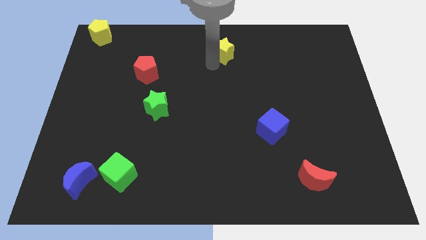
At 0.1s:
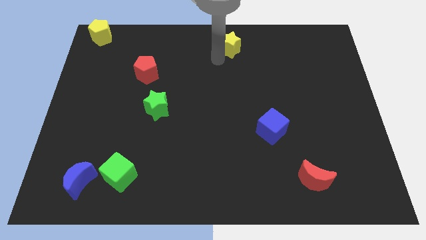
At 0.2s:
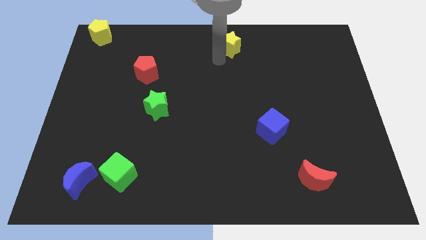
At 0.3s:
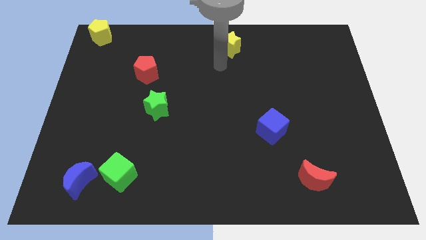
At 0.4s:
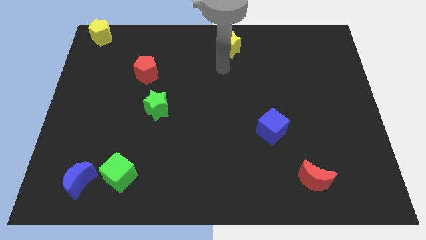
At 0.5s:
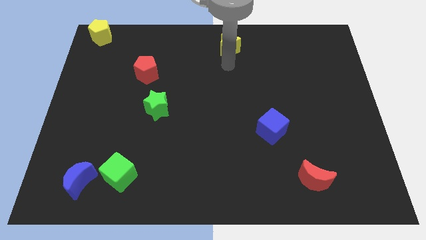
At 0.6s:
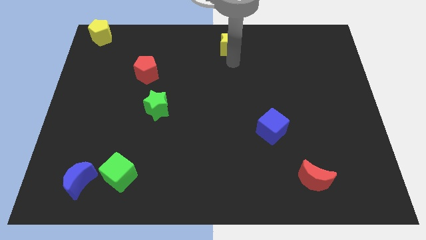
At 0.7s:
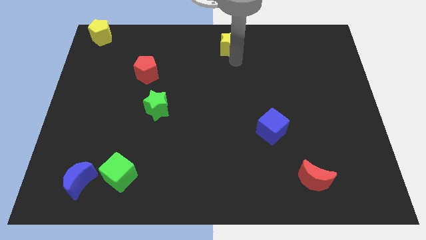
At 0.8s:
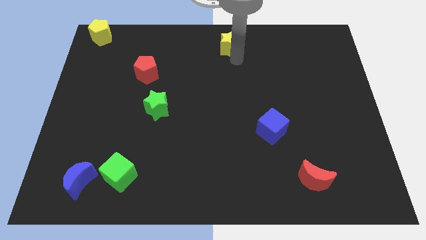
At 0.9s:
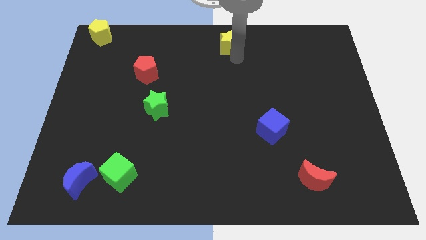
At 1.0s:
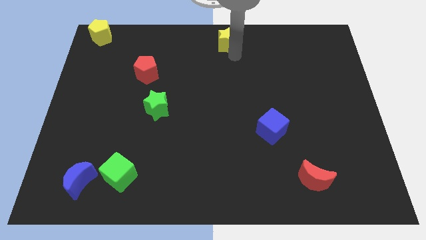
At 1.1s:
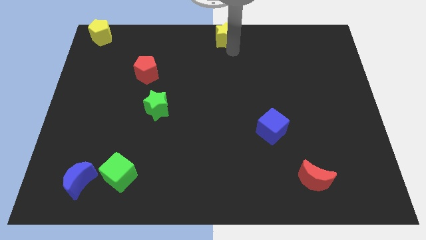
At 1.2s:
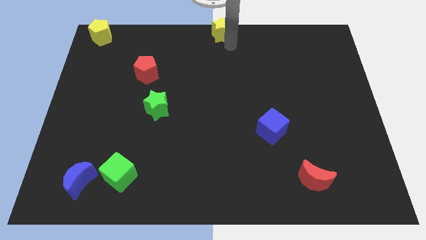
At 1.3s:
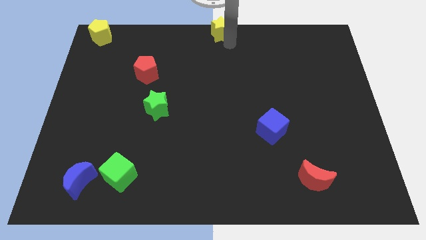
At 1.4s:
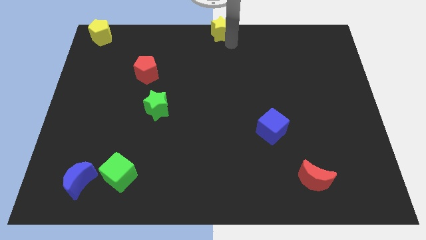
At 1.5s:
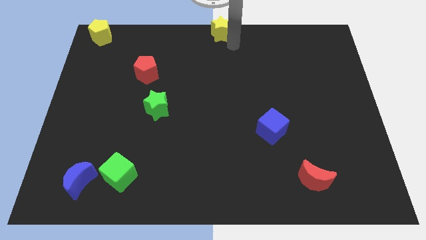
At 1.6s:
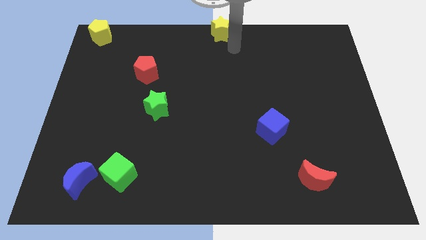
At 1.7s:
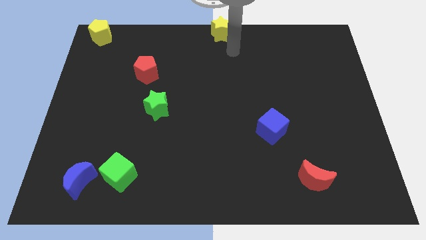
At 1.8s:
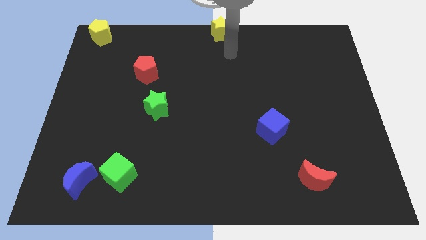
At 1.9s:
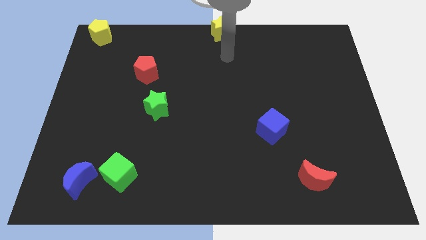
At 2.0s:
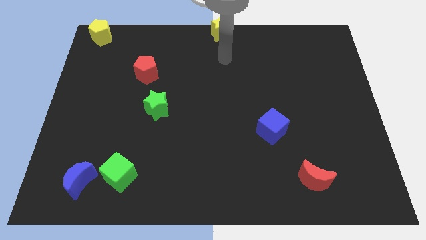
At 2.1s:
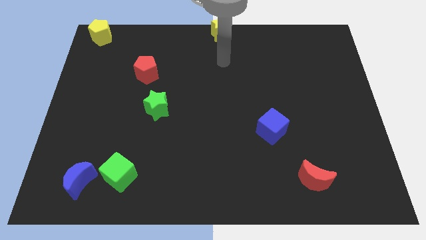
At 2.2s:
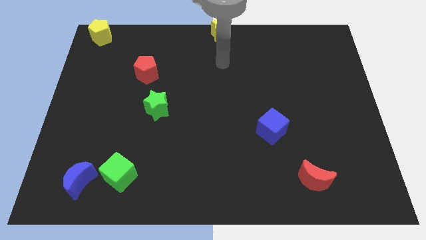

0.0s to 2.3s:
move the yellow star to the top middle

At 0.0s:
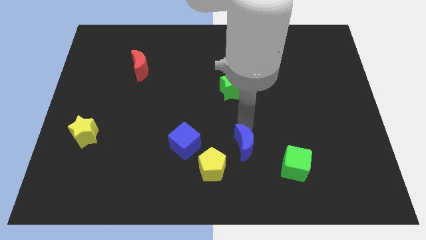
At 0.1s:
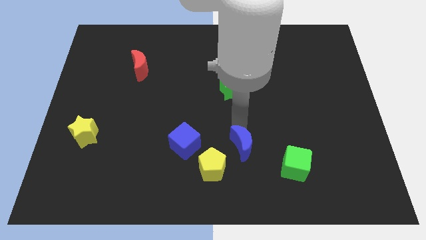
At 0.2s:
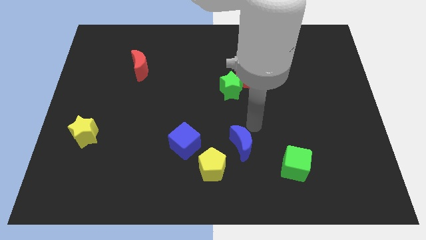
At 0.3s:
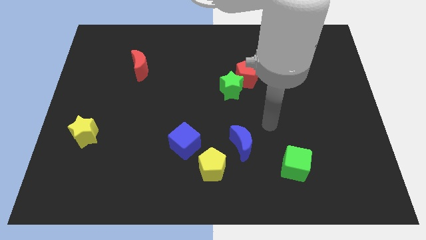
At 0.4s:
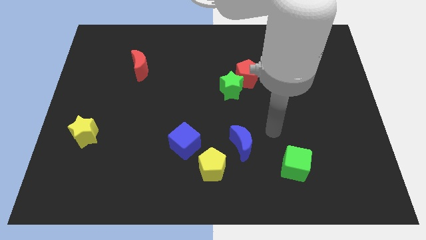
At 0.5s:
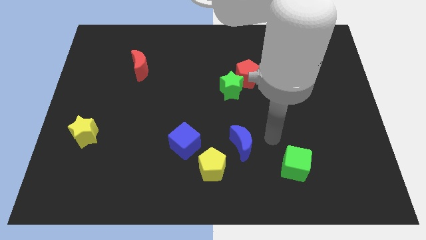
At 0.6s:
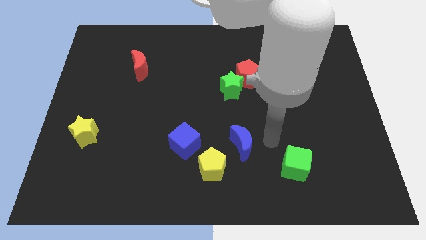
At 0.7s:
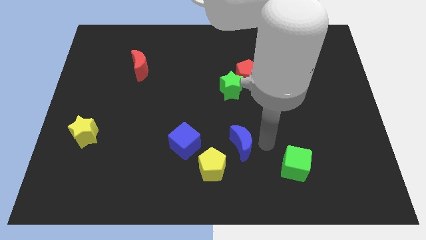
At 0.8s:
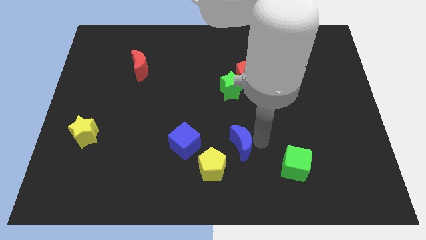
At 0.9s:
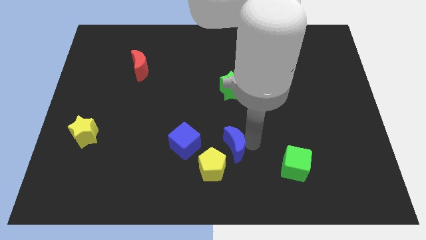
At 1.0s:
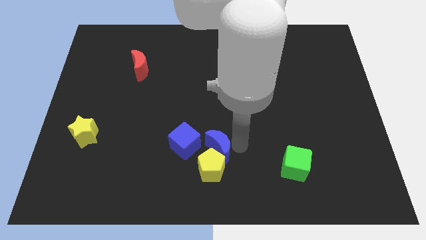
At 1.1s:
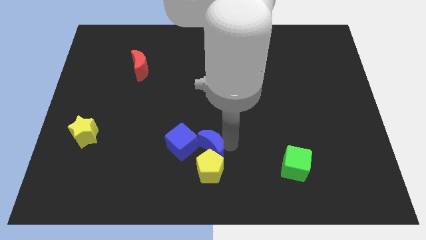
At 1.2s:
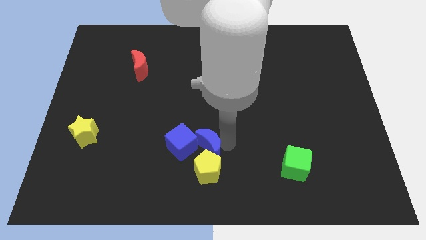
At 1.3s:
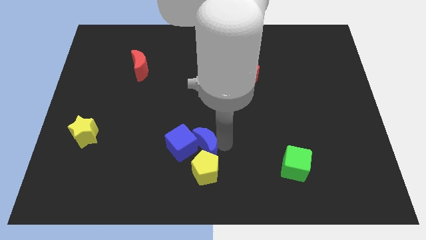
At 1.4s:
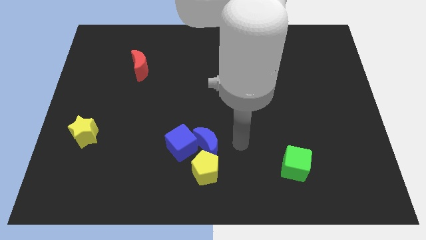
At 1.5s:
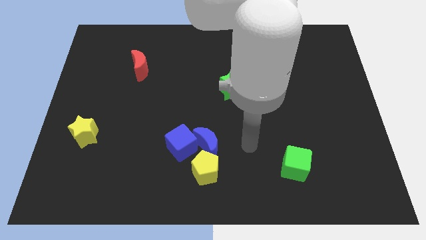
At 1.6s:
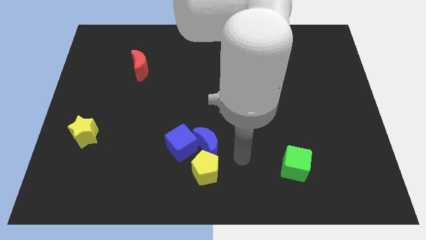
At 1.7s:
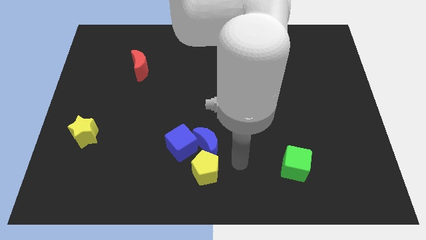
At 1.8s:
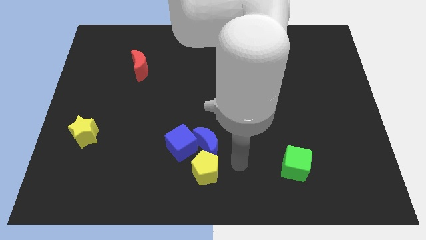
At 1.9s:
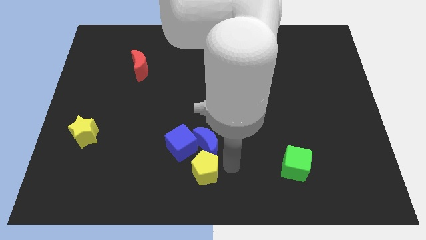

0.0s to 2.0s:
push the blue moon into the blue cube to the right

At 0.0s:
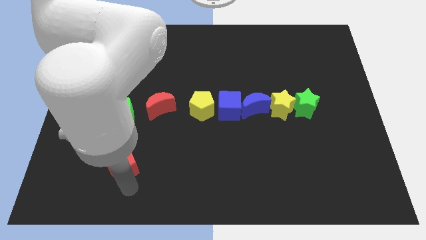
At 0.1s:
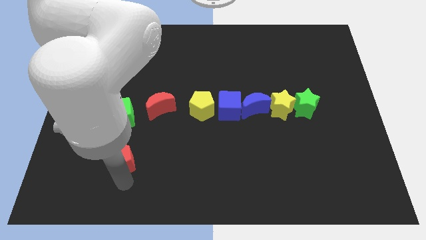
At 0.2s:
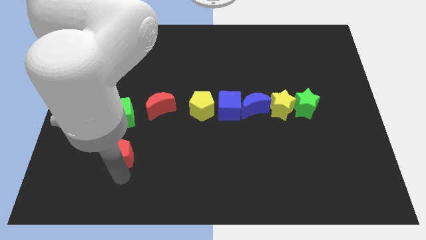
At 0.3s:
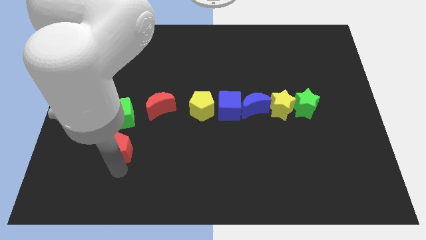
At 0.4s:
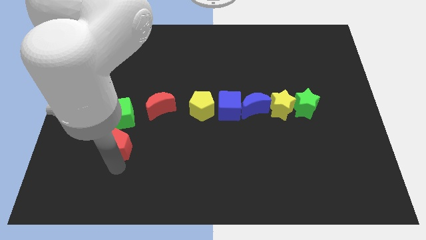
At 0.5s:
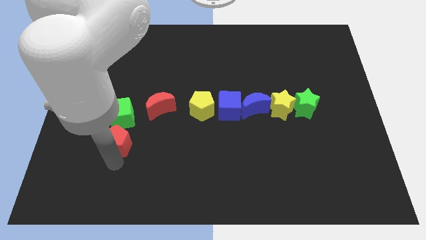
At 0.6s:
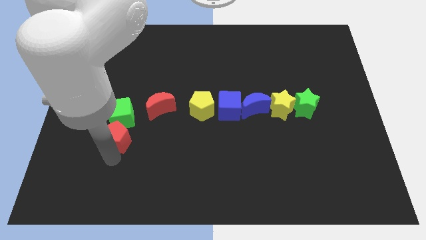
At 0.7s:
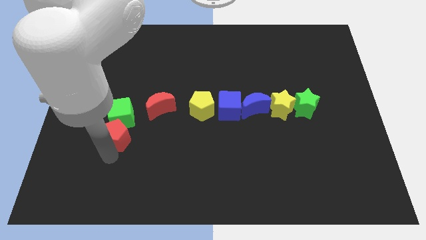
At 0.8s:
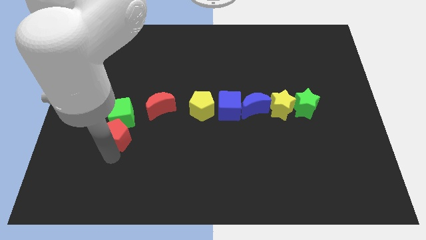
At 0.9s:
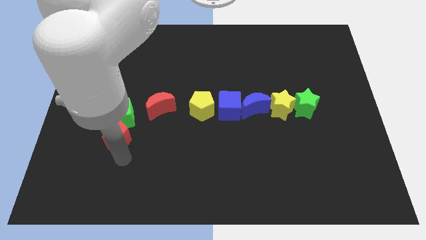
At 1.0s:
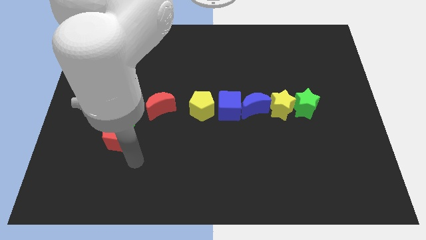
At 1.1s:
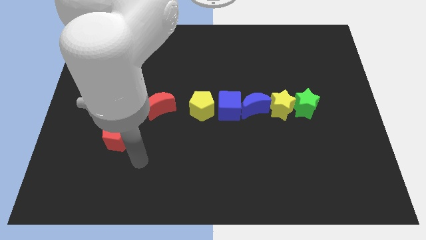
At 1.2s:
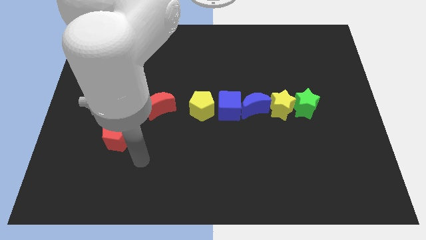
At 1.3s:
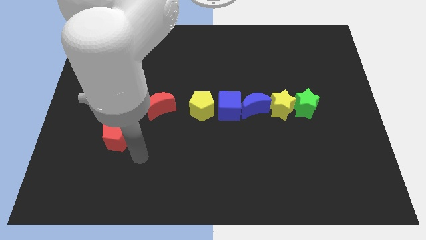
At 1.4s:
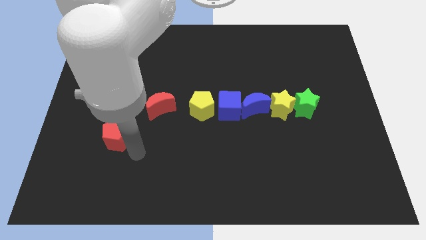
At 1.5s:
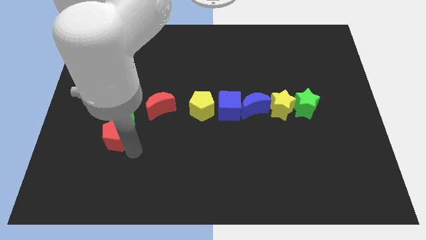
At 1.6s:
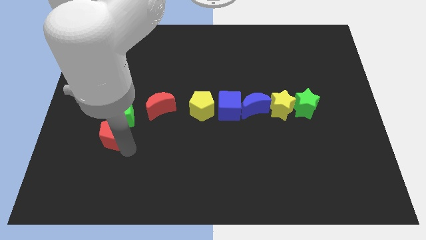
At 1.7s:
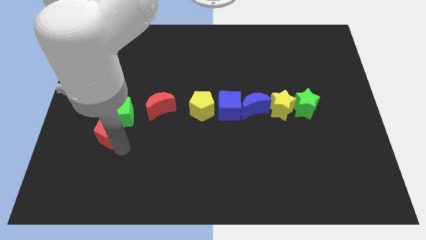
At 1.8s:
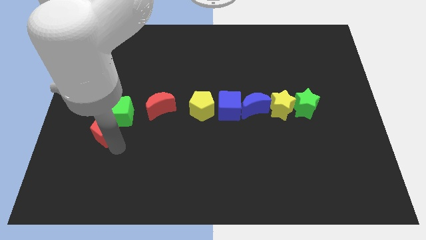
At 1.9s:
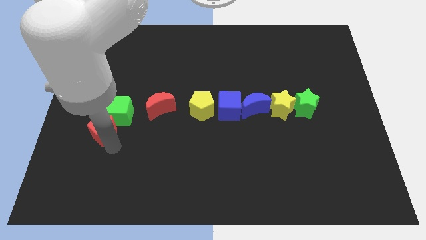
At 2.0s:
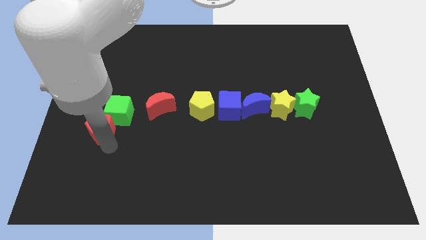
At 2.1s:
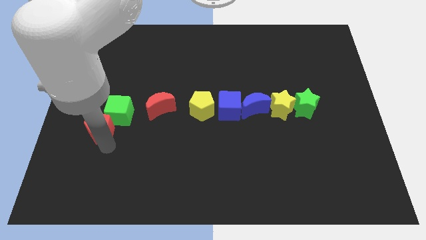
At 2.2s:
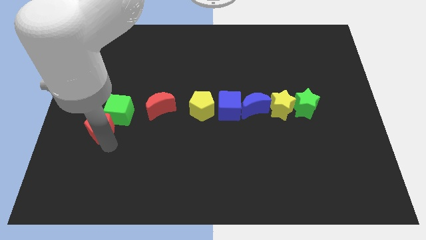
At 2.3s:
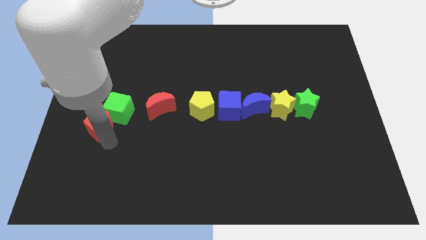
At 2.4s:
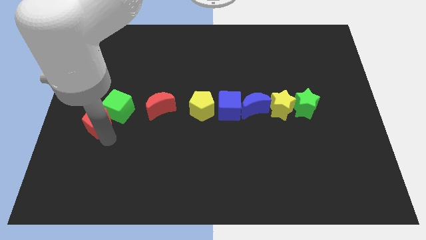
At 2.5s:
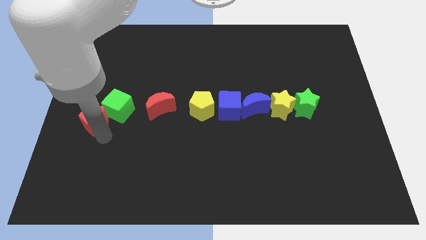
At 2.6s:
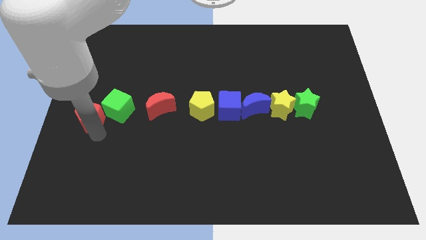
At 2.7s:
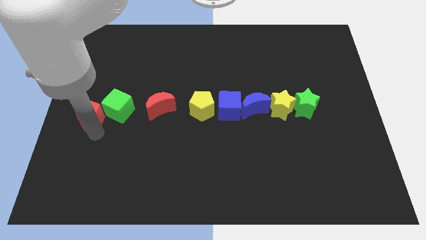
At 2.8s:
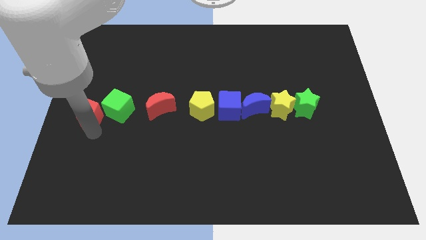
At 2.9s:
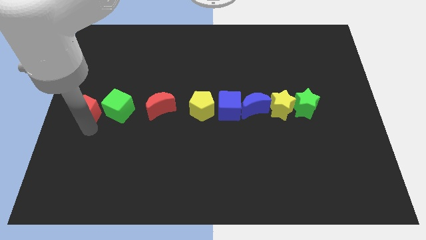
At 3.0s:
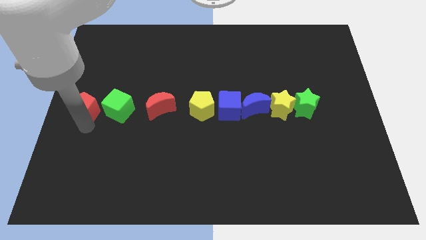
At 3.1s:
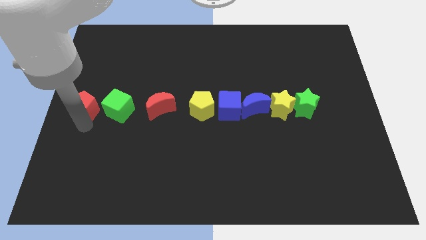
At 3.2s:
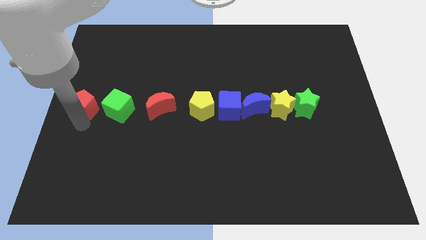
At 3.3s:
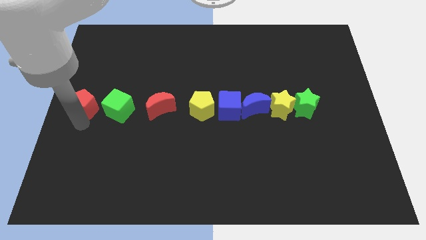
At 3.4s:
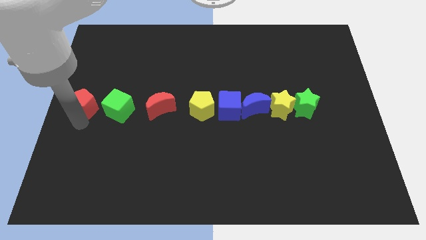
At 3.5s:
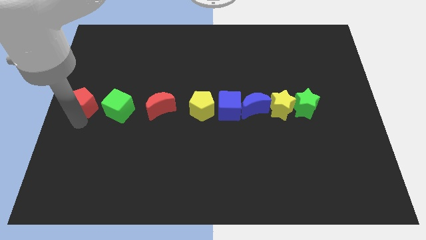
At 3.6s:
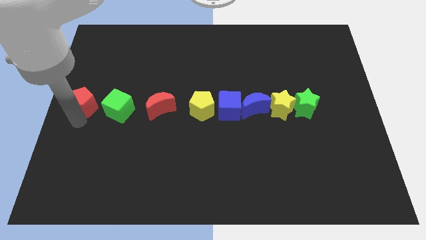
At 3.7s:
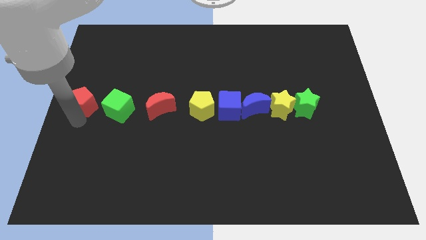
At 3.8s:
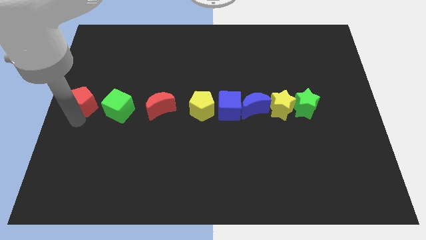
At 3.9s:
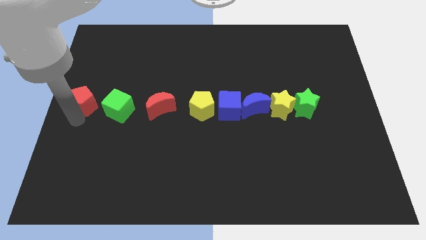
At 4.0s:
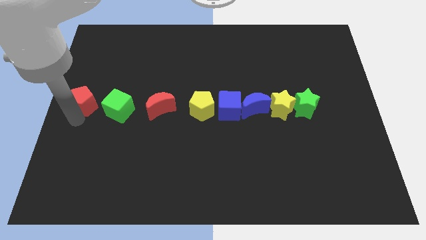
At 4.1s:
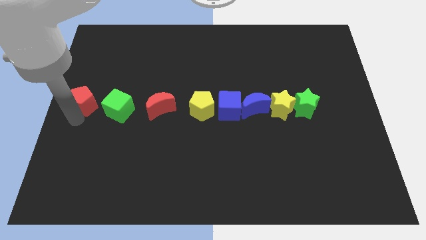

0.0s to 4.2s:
push the red pentagon to the left of the green cube

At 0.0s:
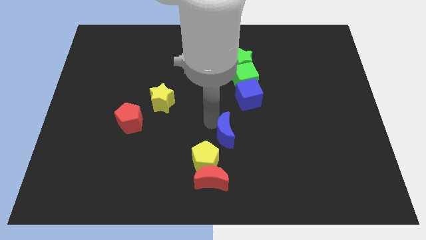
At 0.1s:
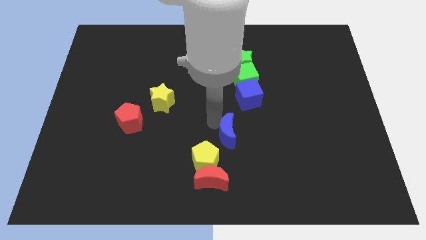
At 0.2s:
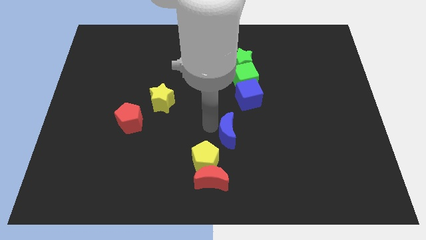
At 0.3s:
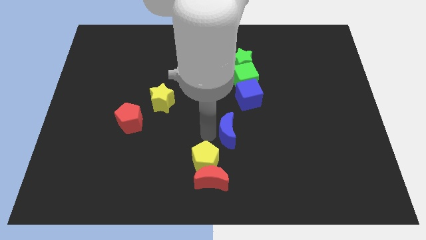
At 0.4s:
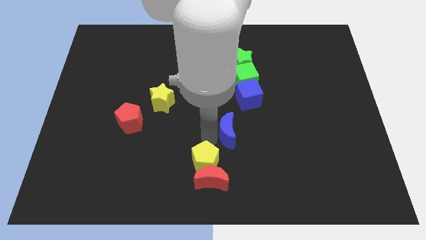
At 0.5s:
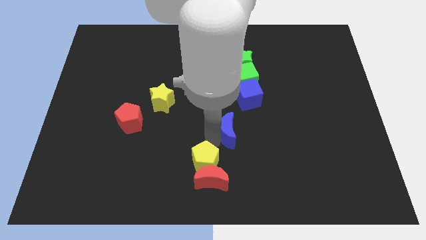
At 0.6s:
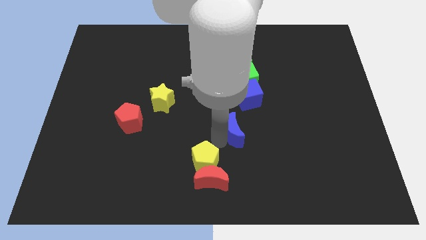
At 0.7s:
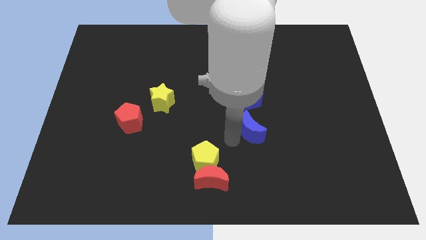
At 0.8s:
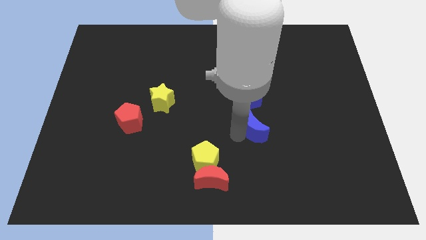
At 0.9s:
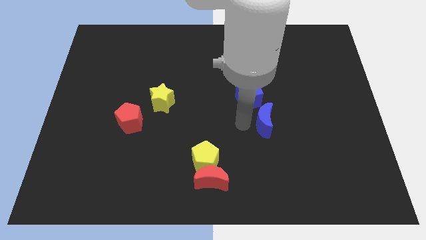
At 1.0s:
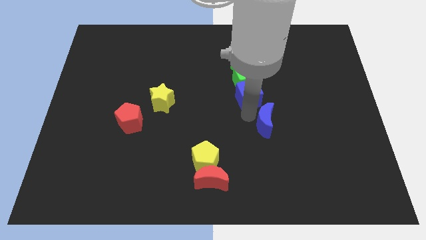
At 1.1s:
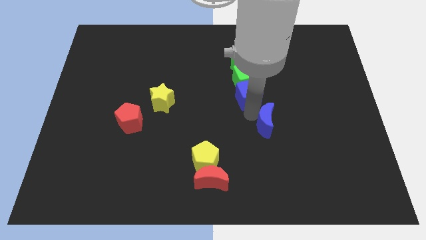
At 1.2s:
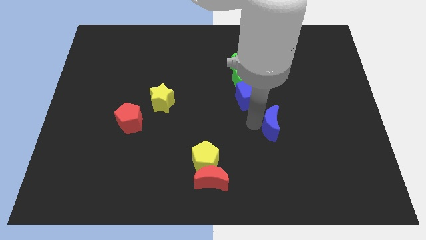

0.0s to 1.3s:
place the blue moon below the blue cube
